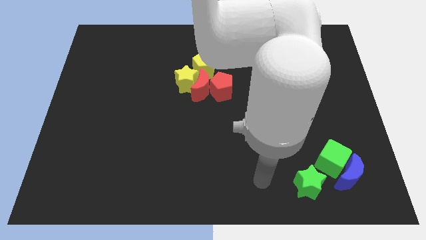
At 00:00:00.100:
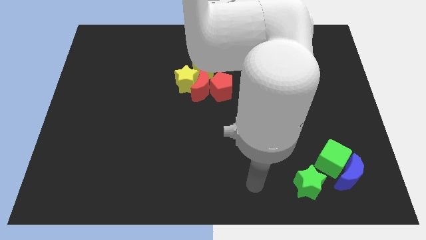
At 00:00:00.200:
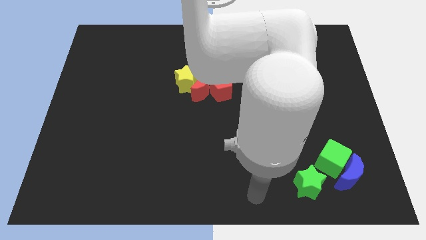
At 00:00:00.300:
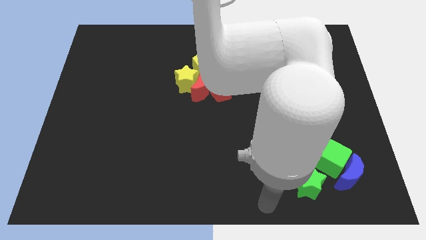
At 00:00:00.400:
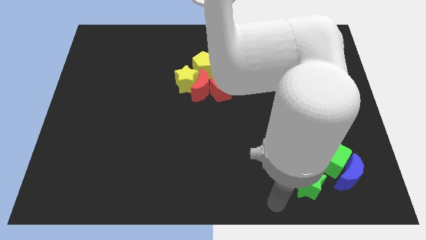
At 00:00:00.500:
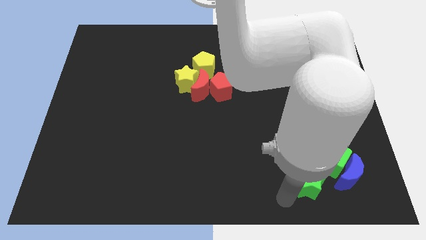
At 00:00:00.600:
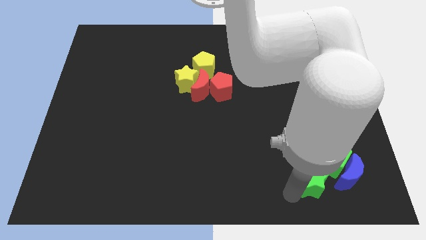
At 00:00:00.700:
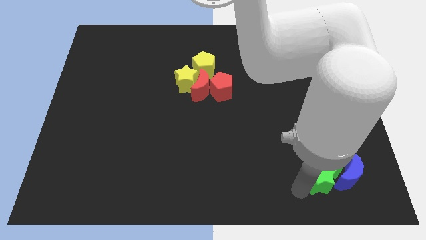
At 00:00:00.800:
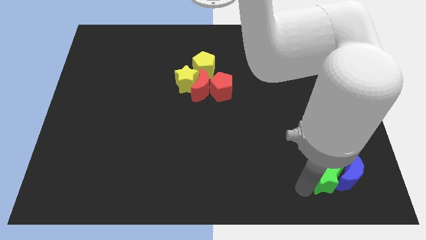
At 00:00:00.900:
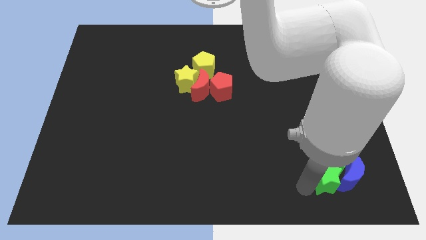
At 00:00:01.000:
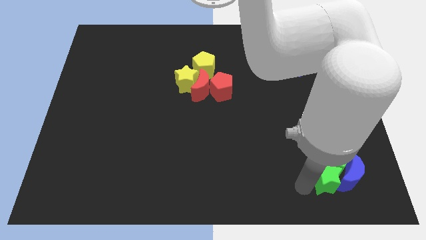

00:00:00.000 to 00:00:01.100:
move the green star below to the green cube

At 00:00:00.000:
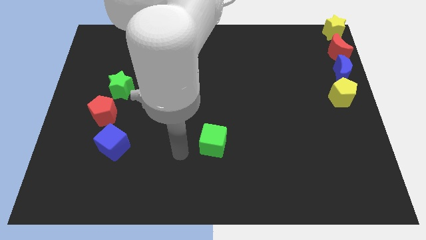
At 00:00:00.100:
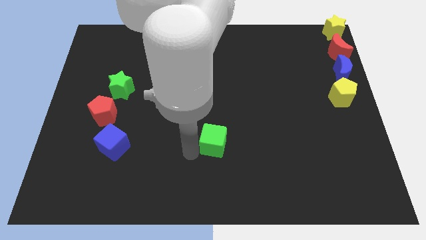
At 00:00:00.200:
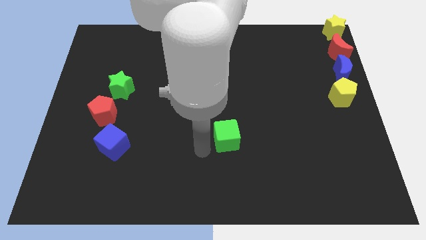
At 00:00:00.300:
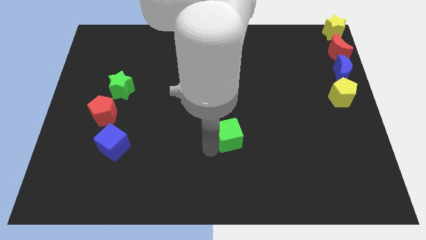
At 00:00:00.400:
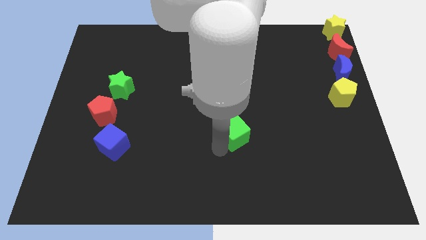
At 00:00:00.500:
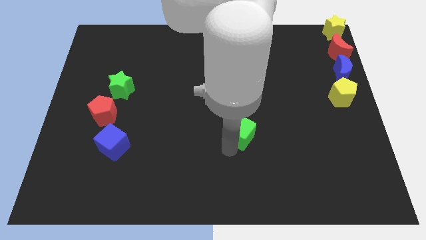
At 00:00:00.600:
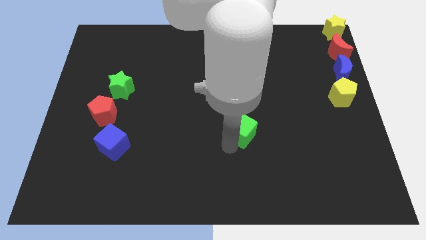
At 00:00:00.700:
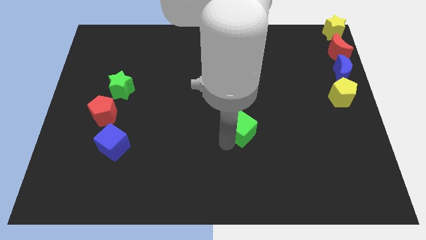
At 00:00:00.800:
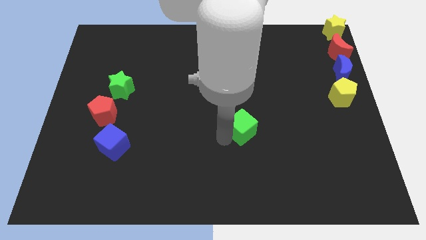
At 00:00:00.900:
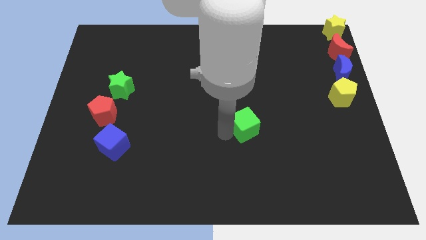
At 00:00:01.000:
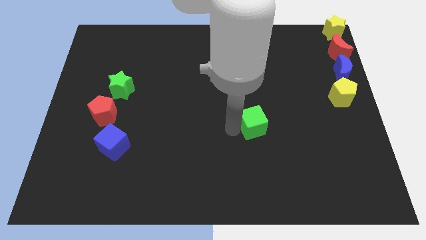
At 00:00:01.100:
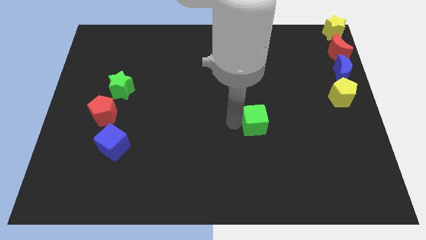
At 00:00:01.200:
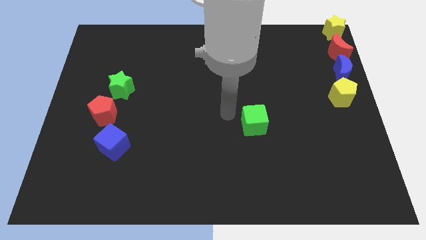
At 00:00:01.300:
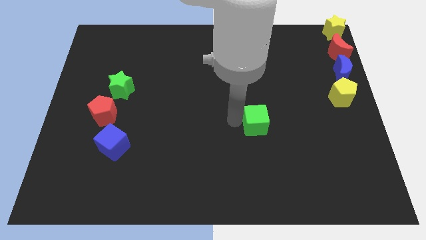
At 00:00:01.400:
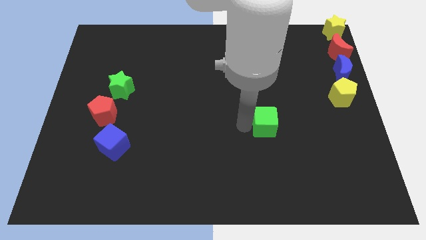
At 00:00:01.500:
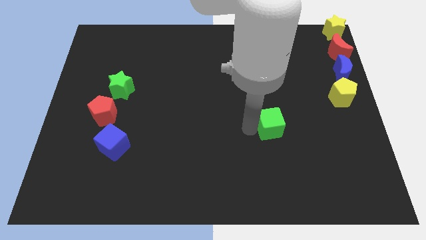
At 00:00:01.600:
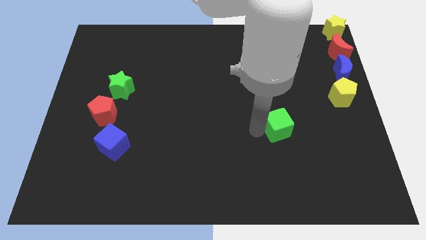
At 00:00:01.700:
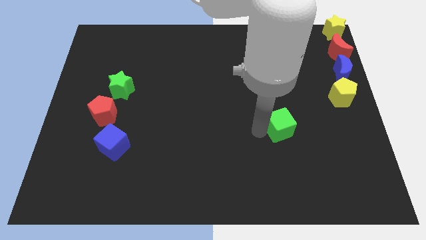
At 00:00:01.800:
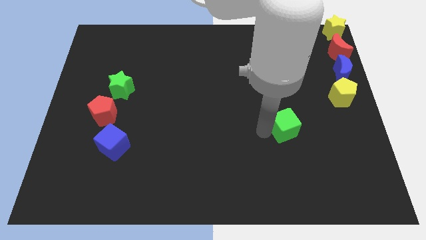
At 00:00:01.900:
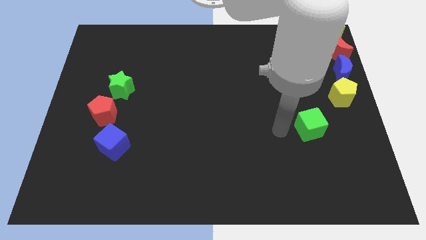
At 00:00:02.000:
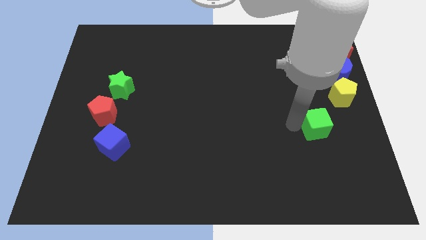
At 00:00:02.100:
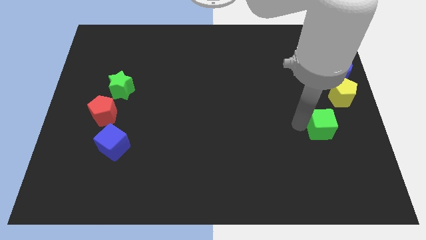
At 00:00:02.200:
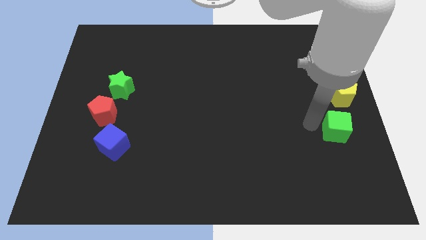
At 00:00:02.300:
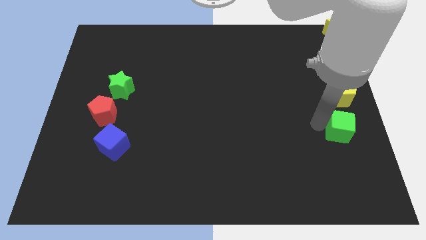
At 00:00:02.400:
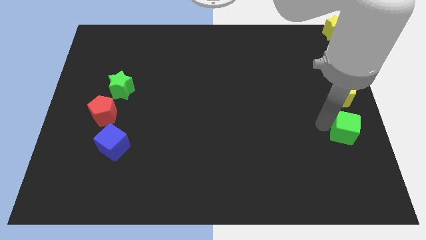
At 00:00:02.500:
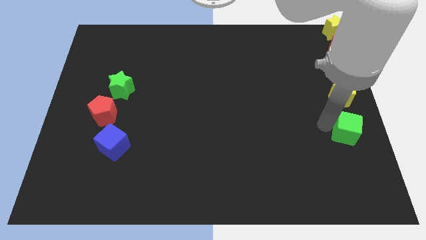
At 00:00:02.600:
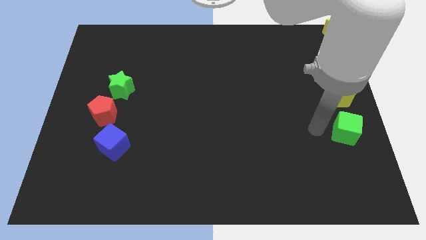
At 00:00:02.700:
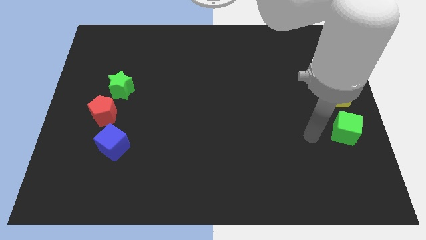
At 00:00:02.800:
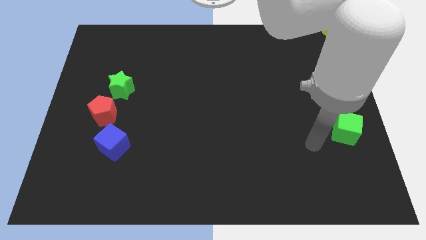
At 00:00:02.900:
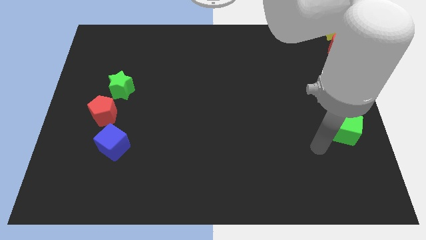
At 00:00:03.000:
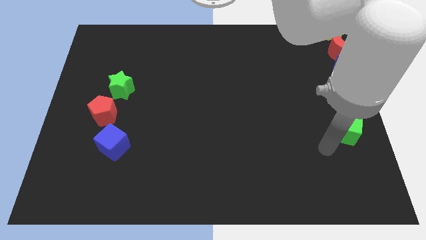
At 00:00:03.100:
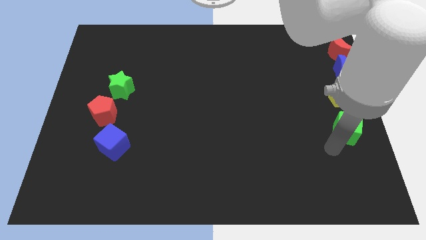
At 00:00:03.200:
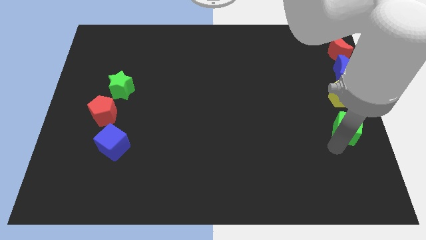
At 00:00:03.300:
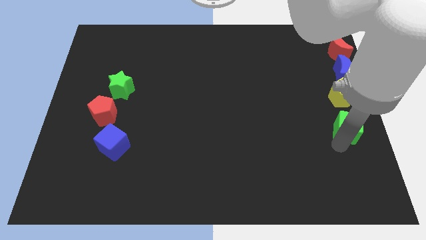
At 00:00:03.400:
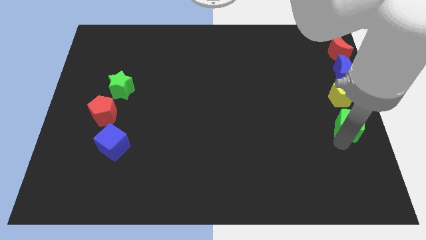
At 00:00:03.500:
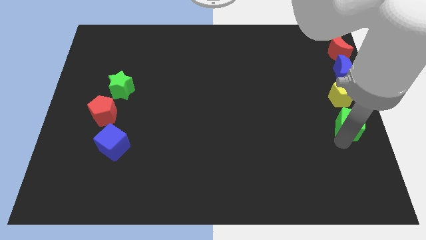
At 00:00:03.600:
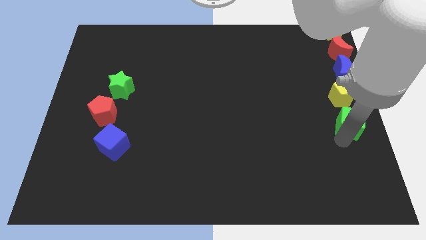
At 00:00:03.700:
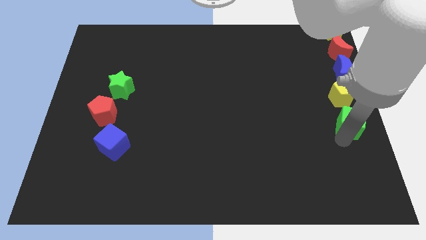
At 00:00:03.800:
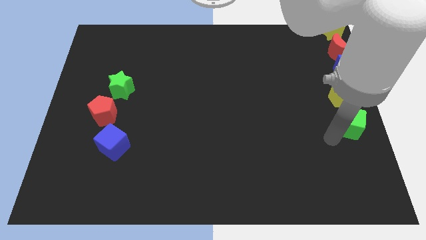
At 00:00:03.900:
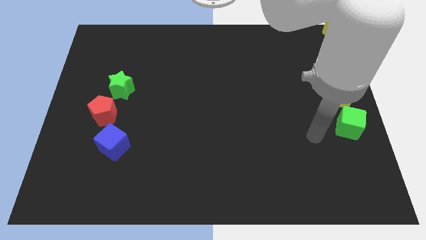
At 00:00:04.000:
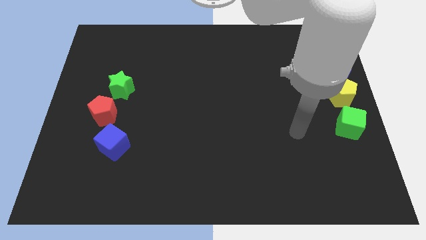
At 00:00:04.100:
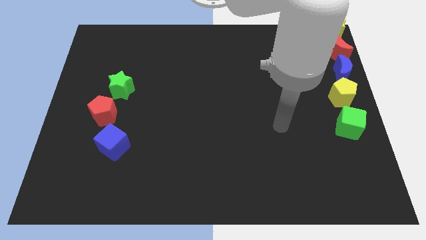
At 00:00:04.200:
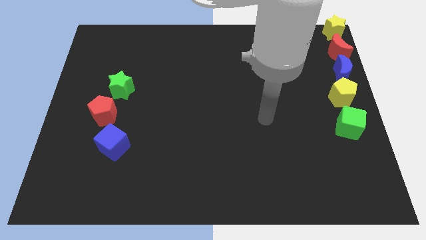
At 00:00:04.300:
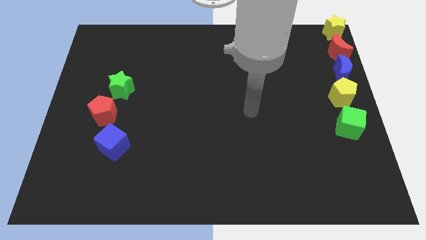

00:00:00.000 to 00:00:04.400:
move the green cube below the yellow pentagon

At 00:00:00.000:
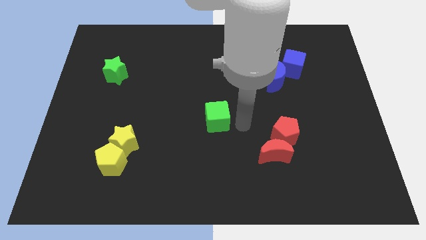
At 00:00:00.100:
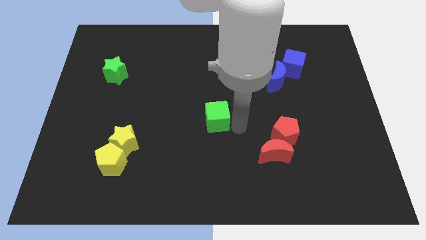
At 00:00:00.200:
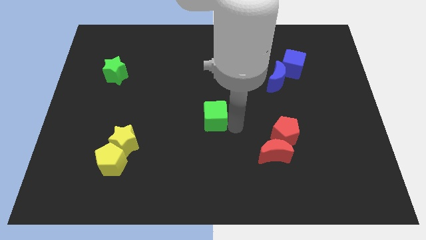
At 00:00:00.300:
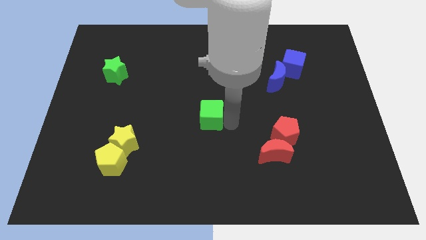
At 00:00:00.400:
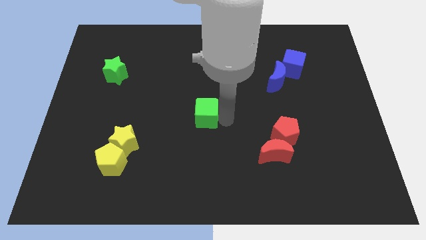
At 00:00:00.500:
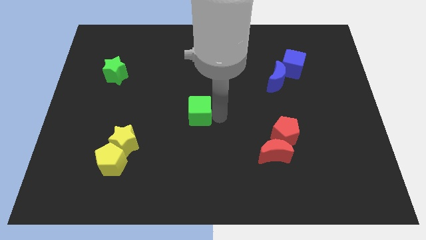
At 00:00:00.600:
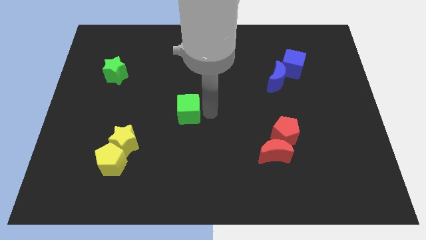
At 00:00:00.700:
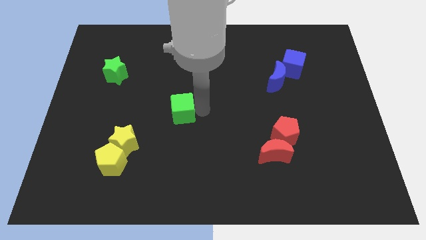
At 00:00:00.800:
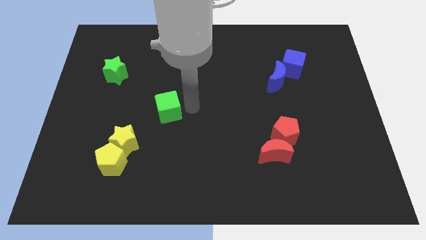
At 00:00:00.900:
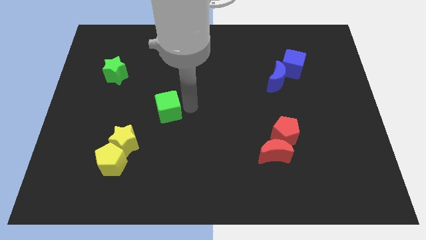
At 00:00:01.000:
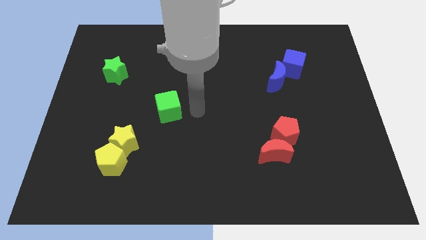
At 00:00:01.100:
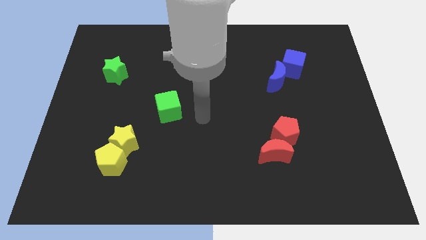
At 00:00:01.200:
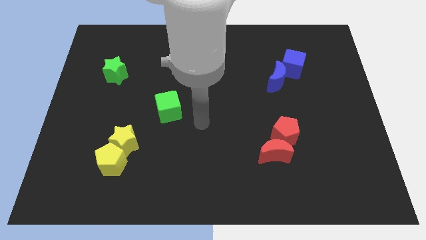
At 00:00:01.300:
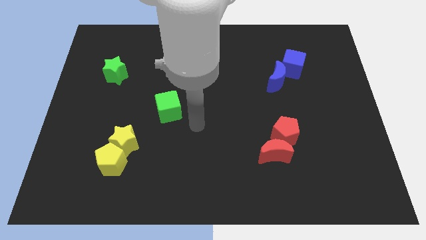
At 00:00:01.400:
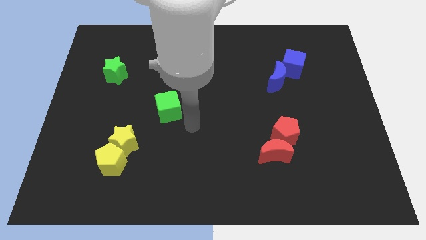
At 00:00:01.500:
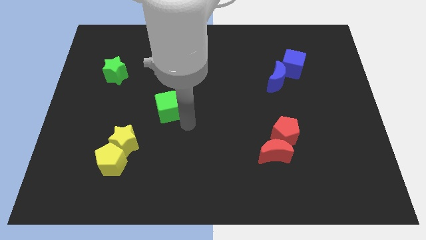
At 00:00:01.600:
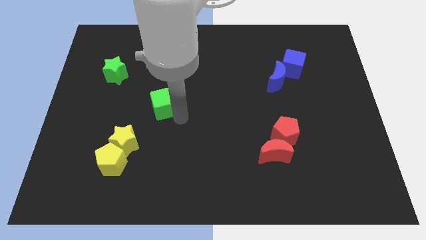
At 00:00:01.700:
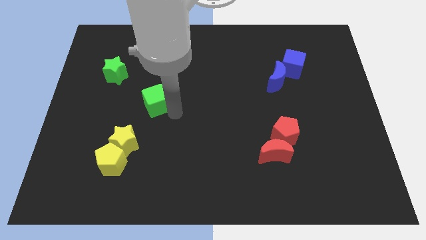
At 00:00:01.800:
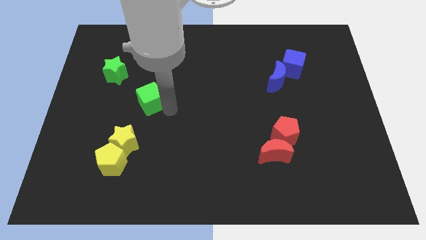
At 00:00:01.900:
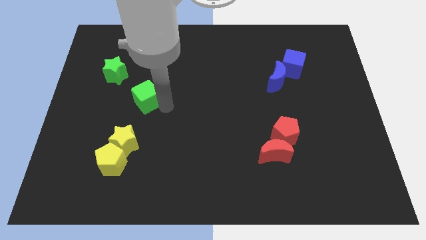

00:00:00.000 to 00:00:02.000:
move the green cube diagonal to the green star

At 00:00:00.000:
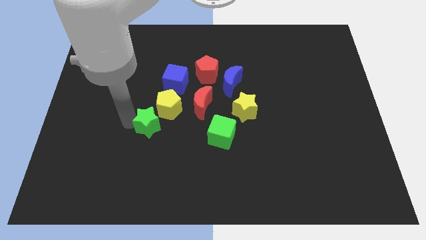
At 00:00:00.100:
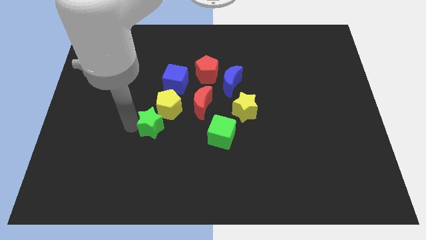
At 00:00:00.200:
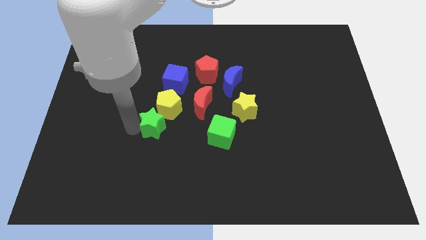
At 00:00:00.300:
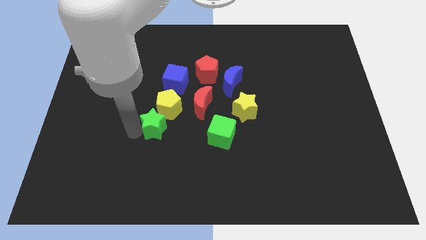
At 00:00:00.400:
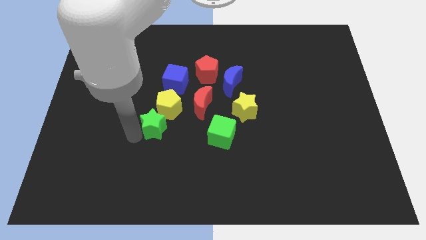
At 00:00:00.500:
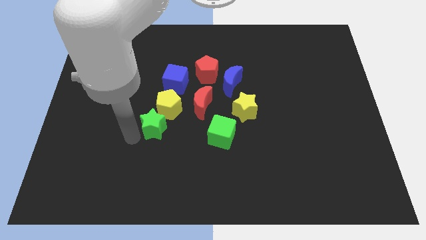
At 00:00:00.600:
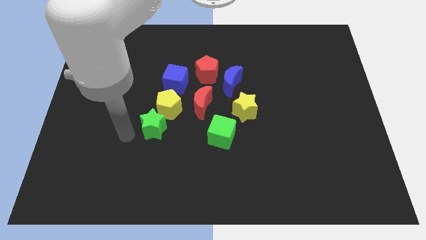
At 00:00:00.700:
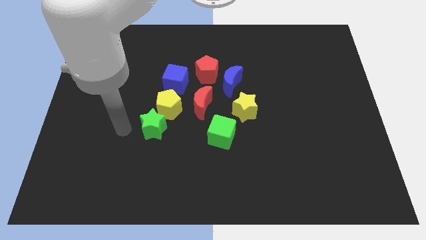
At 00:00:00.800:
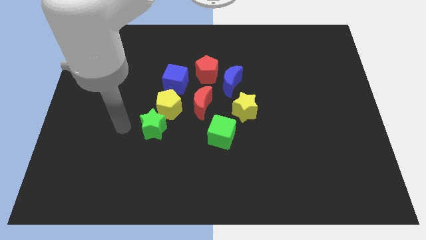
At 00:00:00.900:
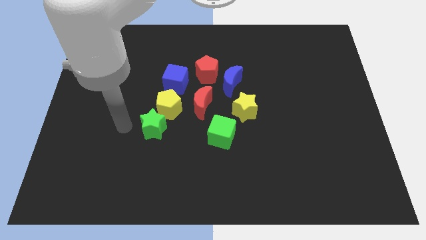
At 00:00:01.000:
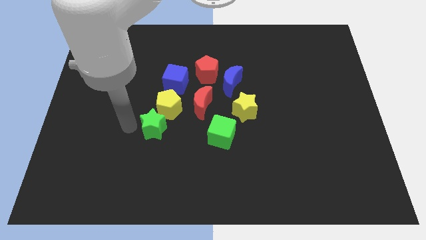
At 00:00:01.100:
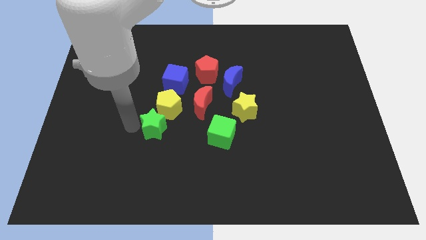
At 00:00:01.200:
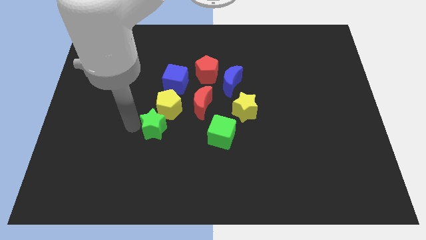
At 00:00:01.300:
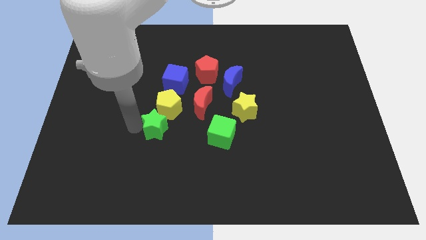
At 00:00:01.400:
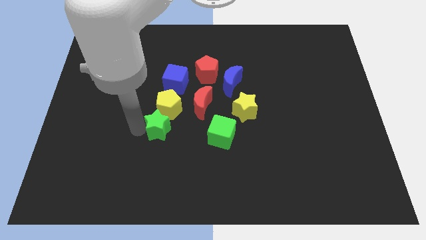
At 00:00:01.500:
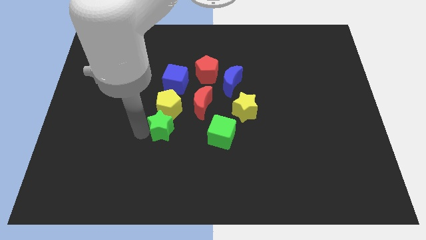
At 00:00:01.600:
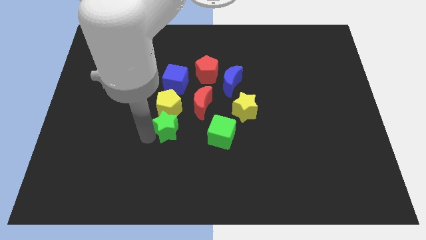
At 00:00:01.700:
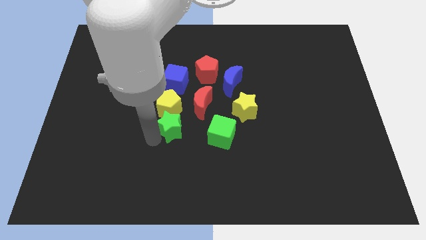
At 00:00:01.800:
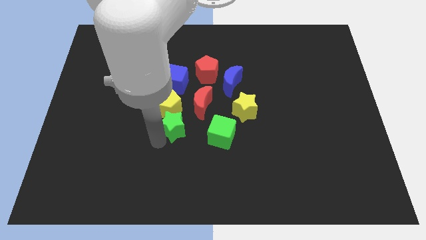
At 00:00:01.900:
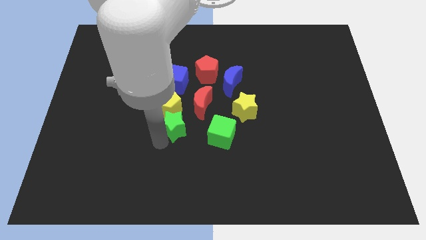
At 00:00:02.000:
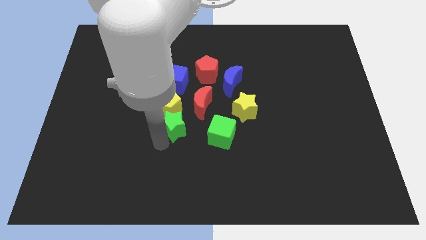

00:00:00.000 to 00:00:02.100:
place the green star below the yellow pentagon
